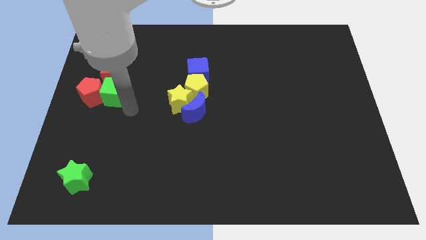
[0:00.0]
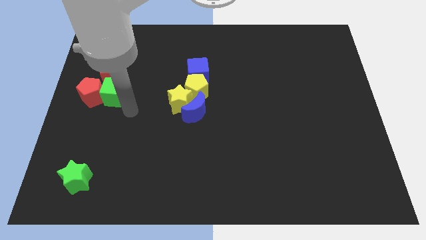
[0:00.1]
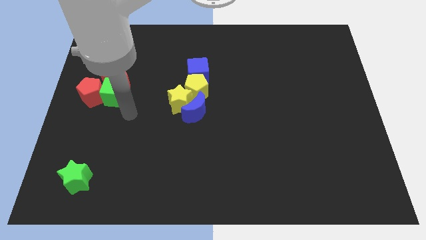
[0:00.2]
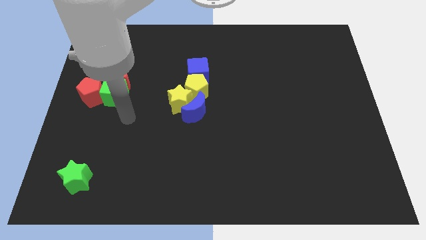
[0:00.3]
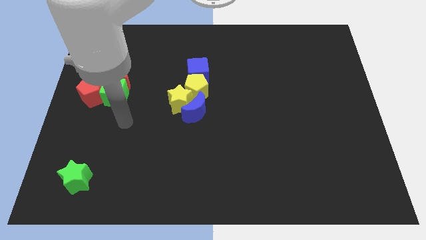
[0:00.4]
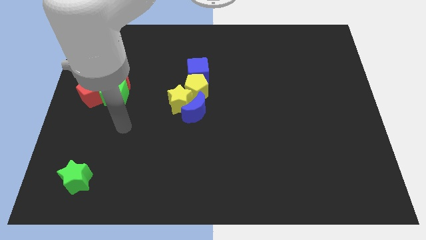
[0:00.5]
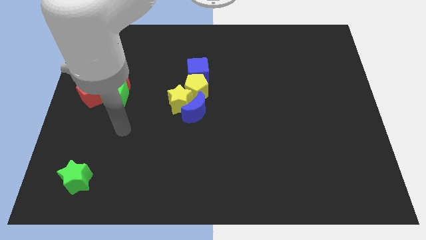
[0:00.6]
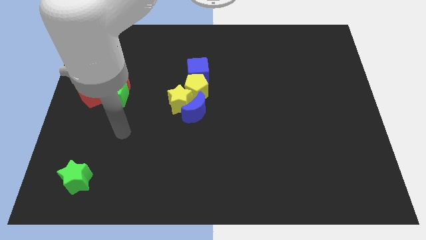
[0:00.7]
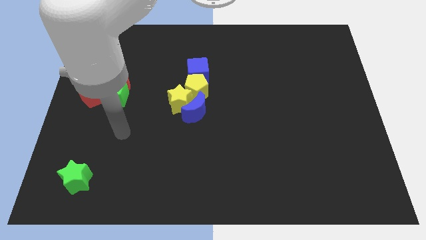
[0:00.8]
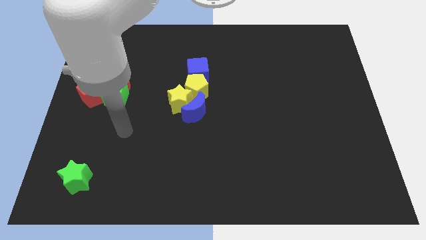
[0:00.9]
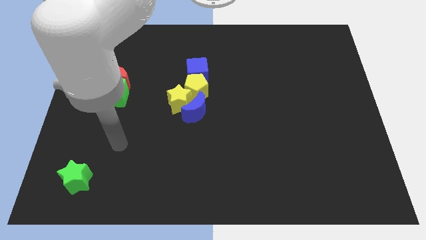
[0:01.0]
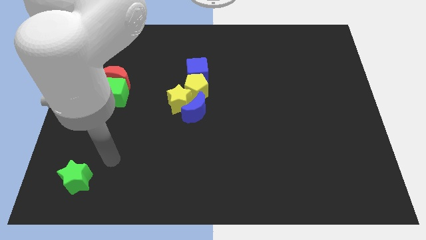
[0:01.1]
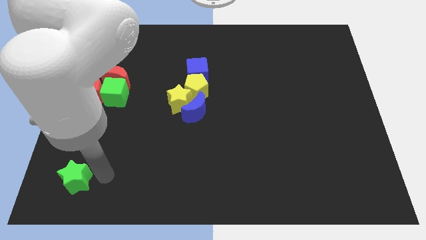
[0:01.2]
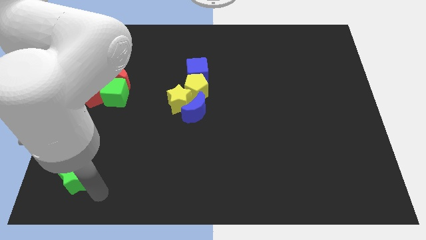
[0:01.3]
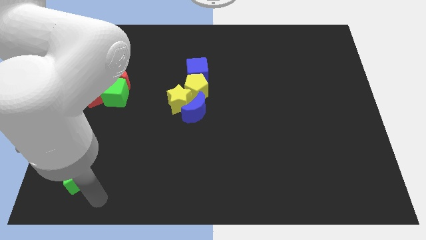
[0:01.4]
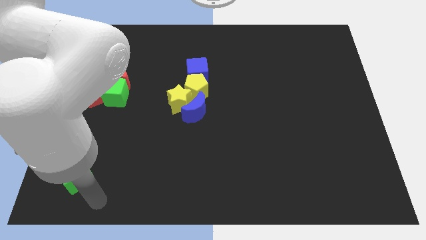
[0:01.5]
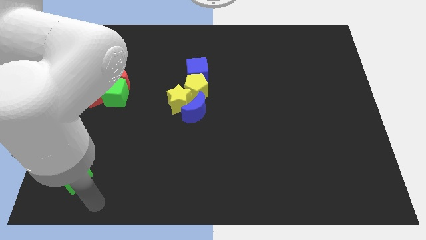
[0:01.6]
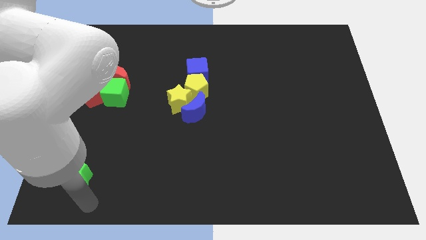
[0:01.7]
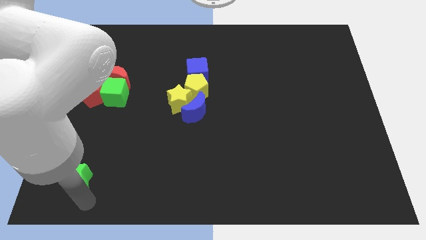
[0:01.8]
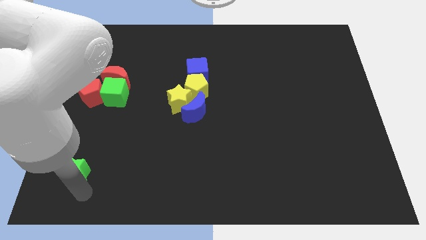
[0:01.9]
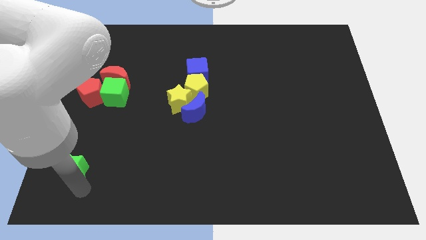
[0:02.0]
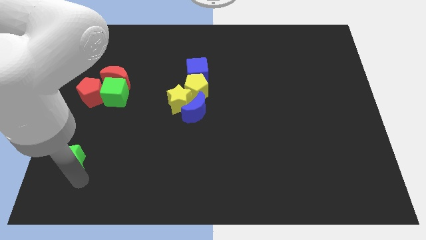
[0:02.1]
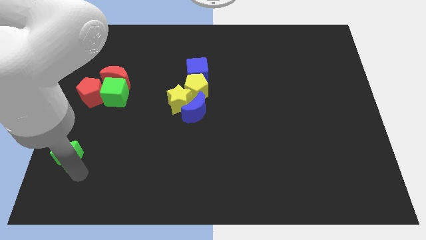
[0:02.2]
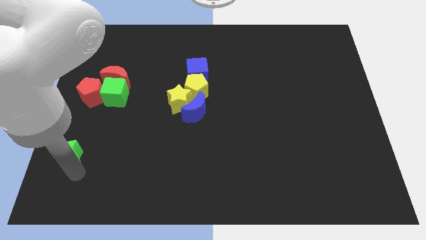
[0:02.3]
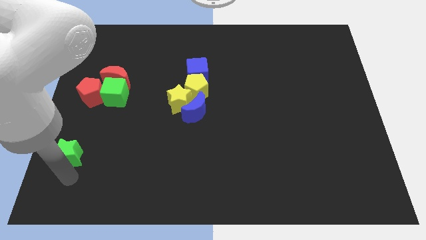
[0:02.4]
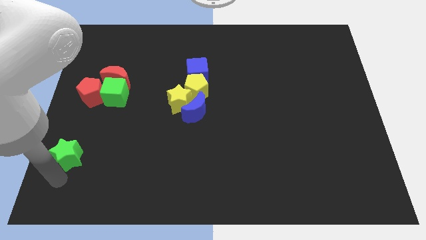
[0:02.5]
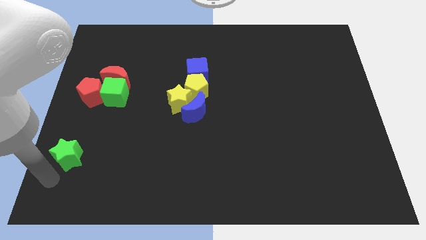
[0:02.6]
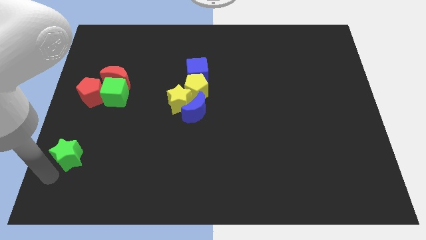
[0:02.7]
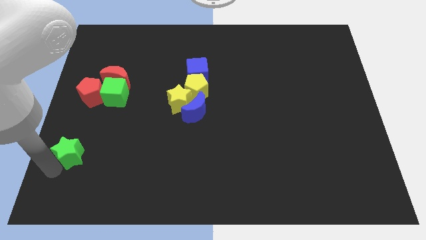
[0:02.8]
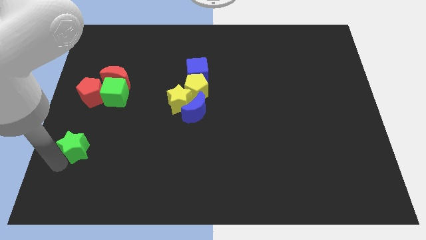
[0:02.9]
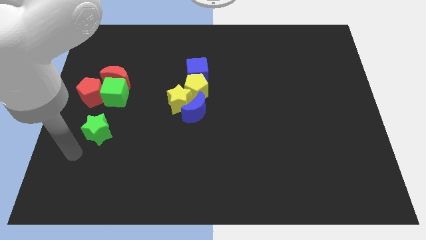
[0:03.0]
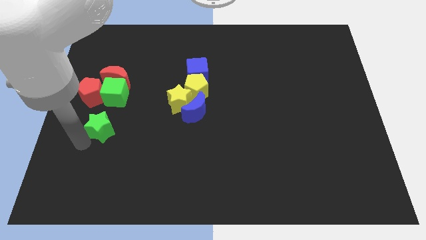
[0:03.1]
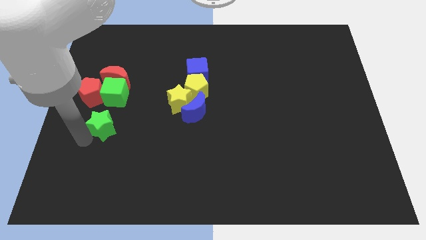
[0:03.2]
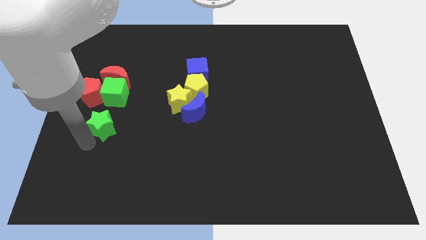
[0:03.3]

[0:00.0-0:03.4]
push the green star towards the green cube

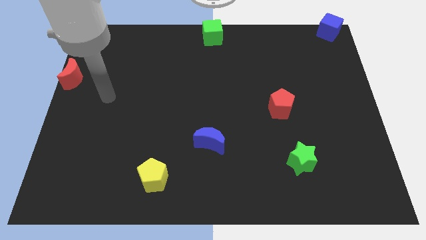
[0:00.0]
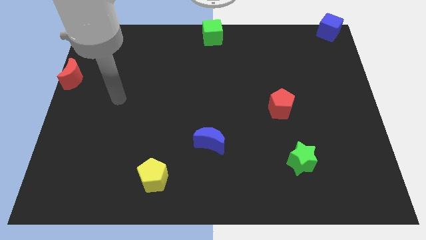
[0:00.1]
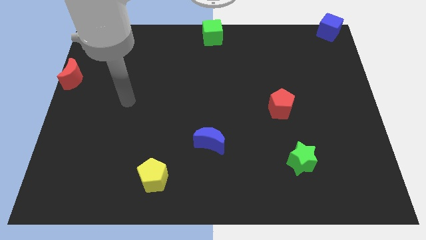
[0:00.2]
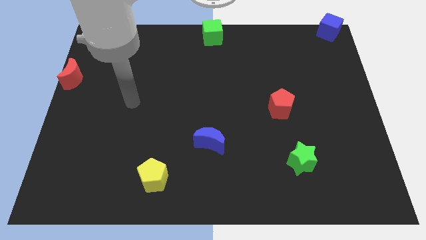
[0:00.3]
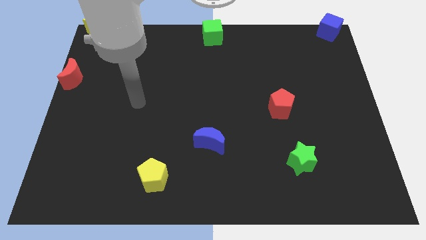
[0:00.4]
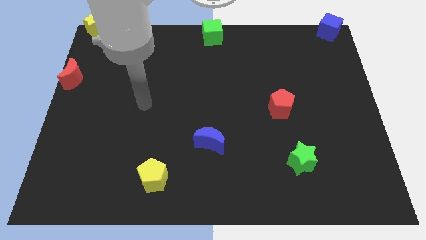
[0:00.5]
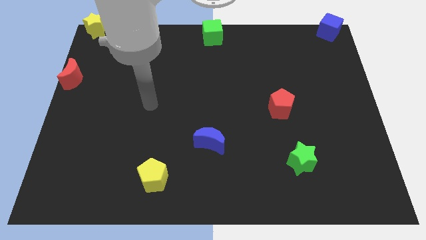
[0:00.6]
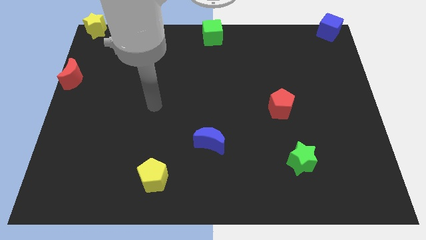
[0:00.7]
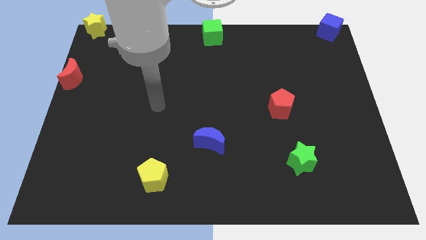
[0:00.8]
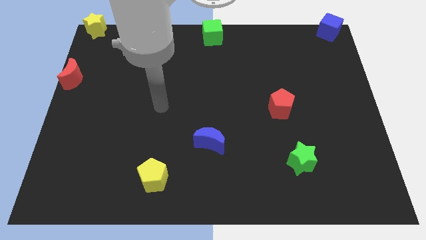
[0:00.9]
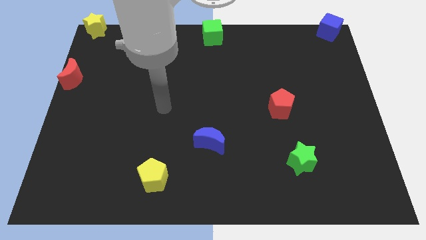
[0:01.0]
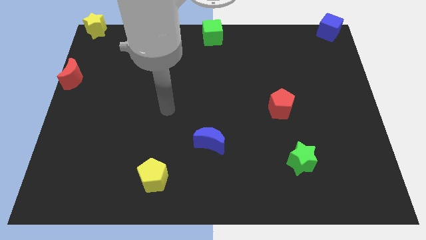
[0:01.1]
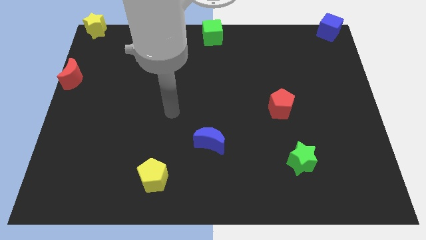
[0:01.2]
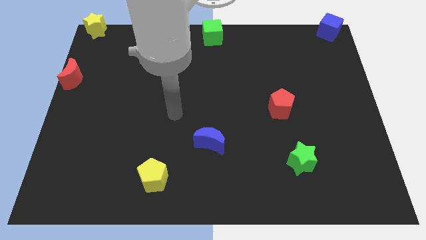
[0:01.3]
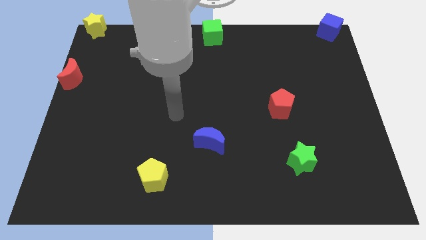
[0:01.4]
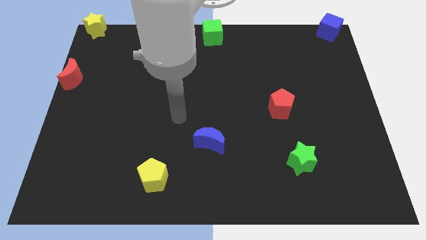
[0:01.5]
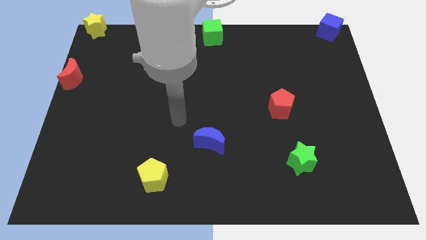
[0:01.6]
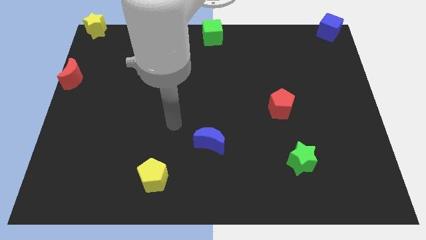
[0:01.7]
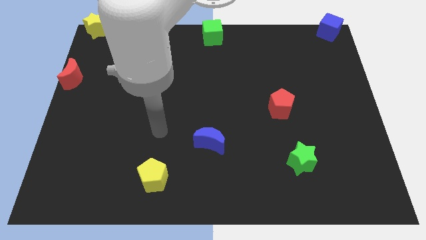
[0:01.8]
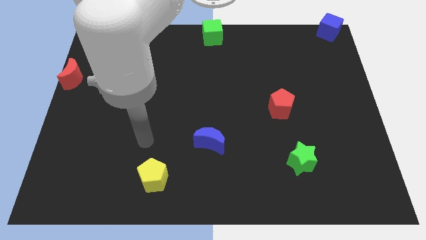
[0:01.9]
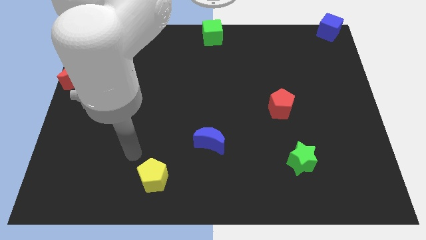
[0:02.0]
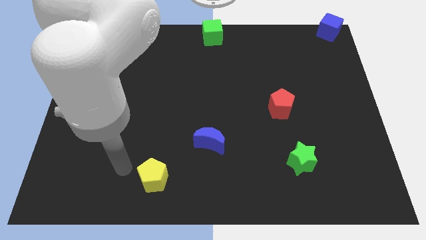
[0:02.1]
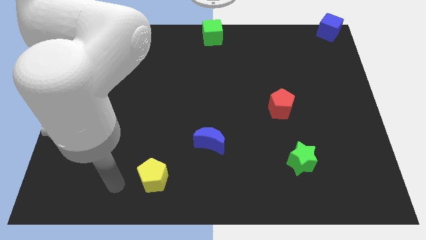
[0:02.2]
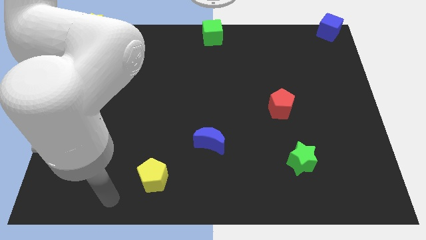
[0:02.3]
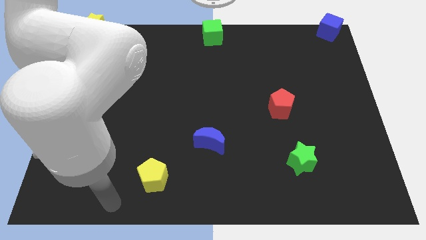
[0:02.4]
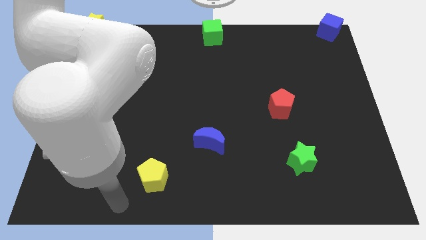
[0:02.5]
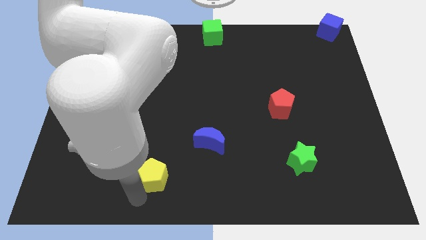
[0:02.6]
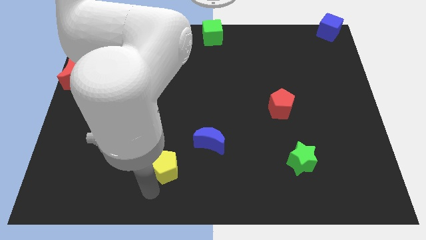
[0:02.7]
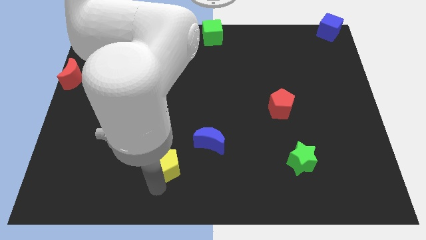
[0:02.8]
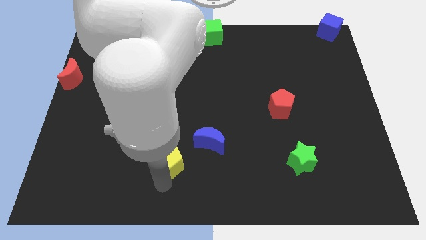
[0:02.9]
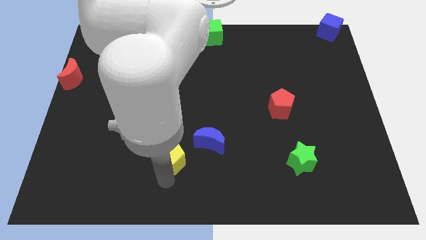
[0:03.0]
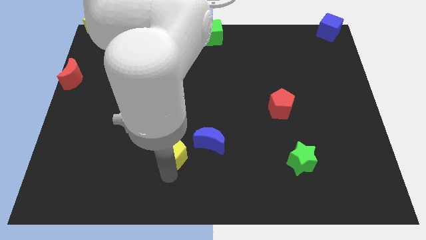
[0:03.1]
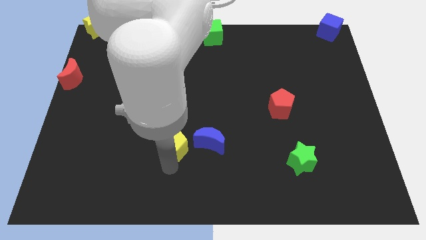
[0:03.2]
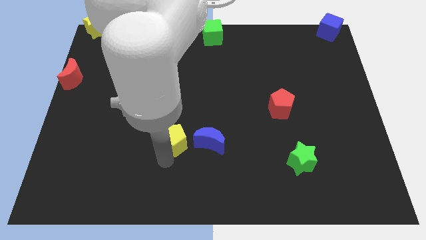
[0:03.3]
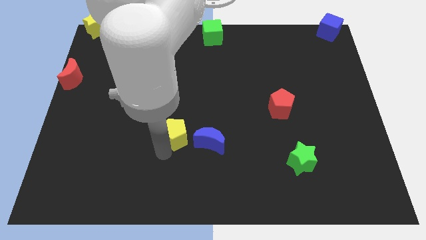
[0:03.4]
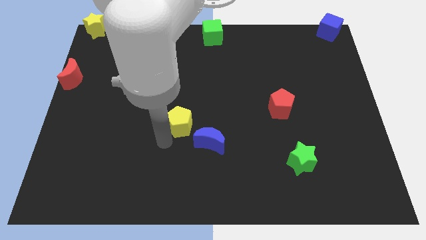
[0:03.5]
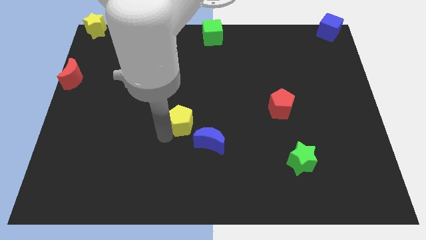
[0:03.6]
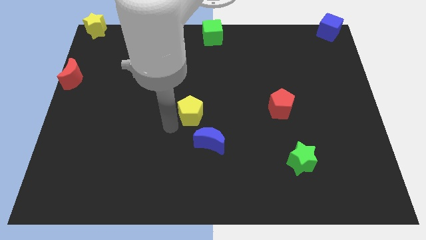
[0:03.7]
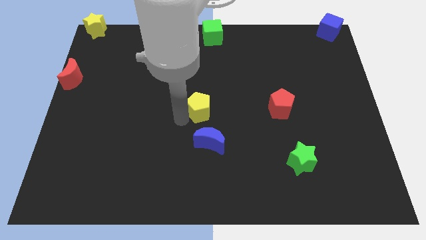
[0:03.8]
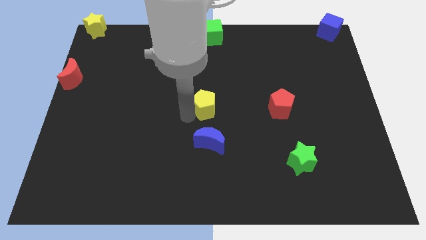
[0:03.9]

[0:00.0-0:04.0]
move yellow pentagon towards the center of the board

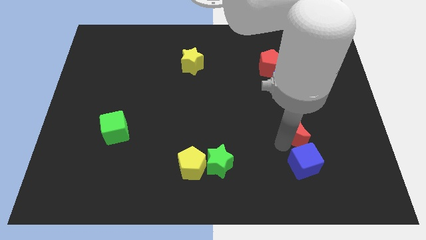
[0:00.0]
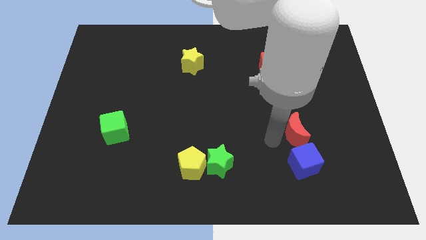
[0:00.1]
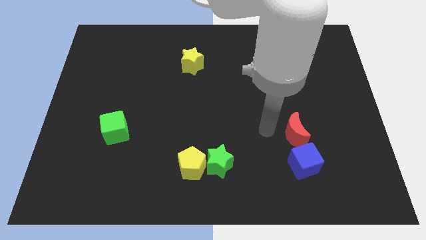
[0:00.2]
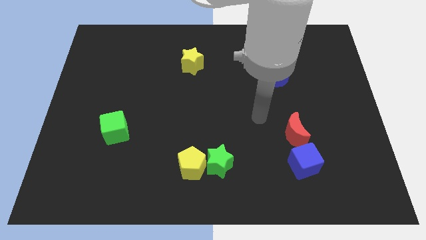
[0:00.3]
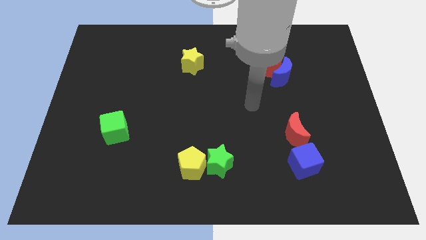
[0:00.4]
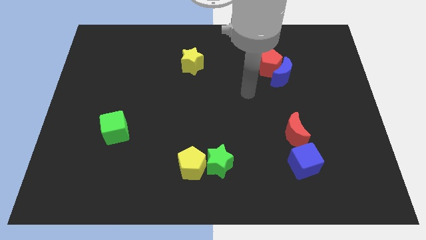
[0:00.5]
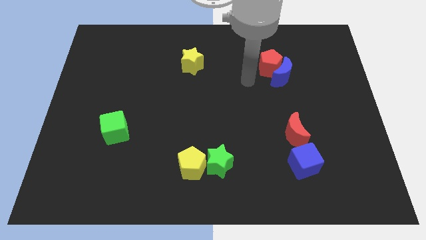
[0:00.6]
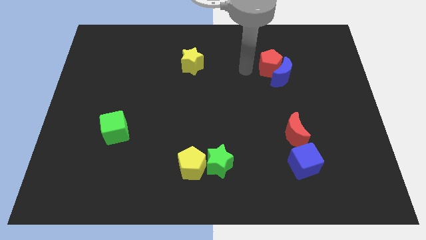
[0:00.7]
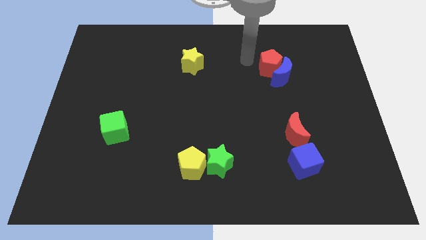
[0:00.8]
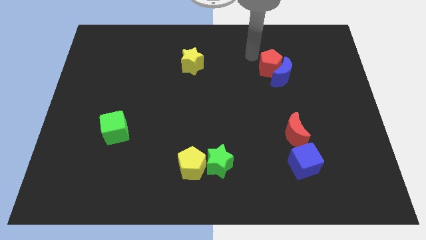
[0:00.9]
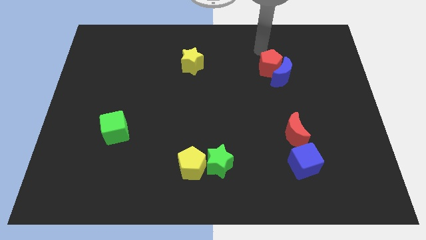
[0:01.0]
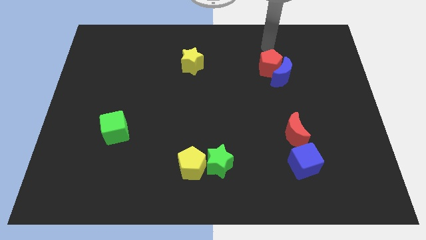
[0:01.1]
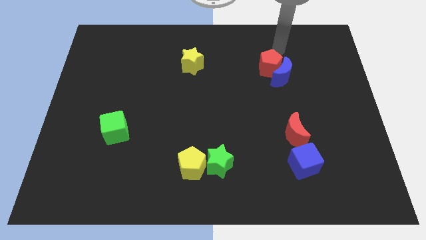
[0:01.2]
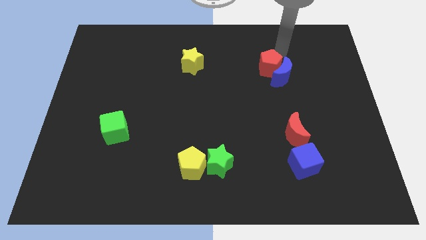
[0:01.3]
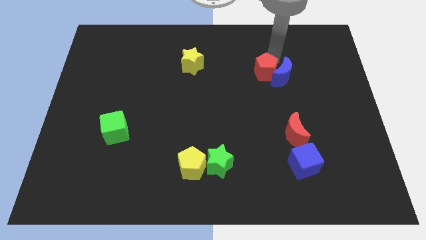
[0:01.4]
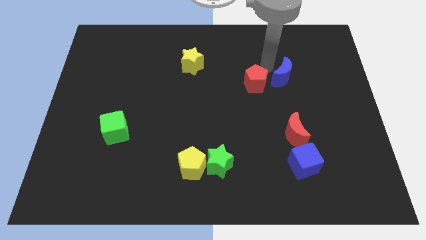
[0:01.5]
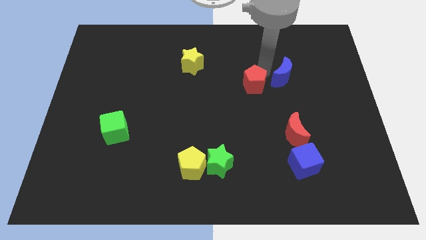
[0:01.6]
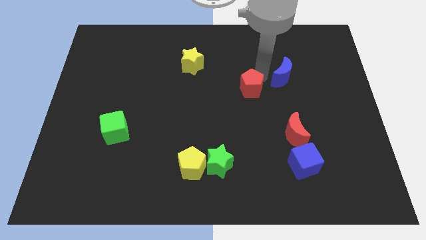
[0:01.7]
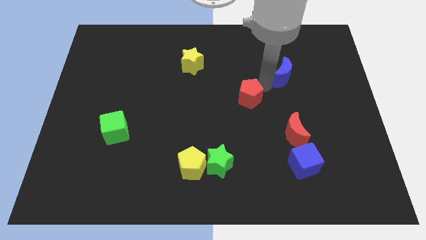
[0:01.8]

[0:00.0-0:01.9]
separate the red pentagon from the blue moon
